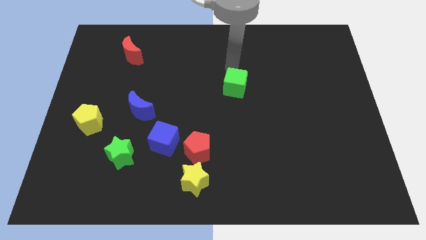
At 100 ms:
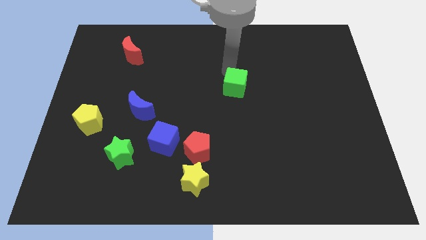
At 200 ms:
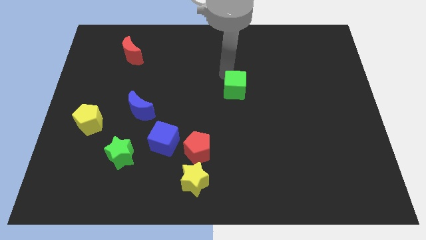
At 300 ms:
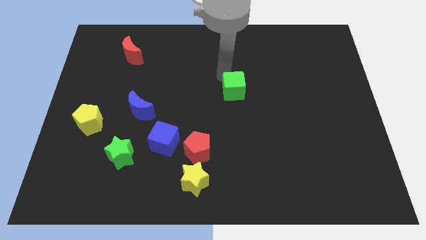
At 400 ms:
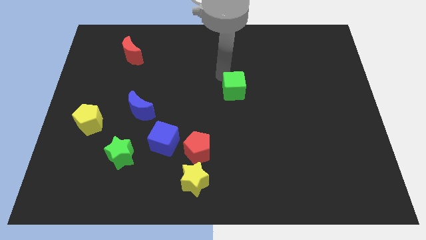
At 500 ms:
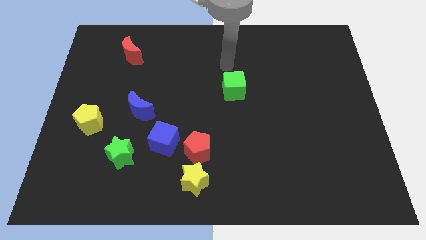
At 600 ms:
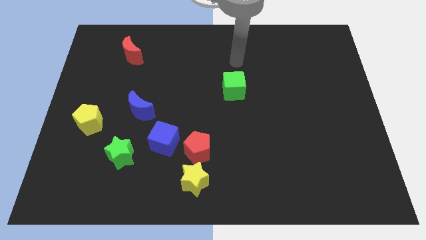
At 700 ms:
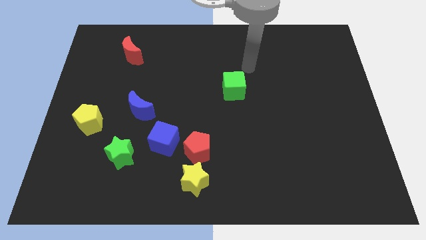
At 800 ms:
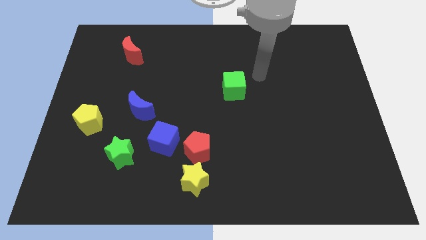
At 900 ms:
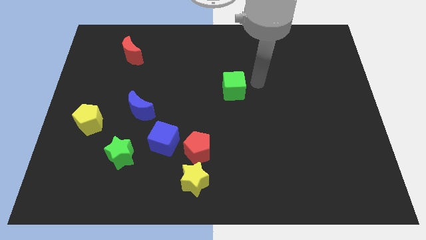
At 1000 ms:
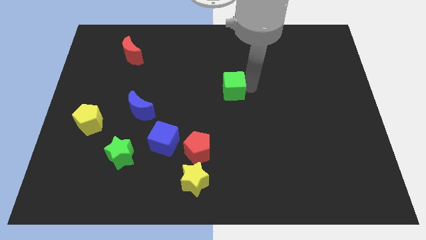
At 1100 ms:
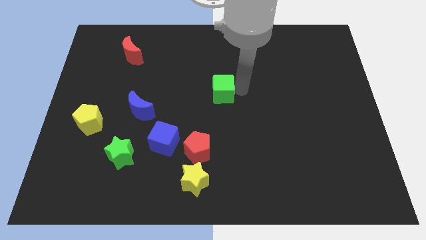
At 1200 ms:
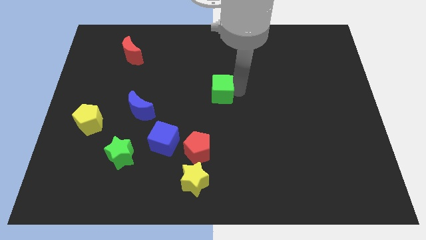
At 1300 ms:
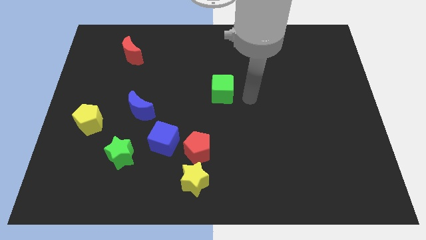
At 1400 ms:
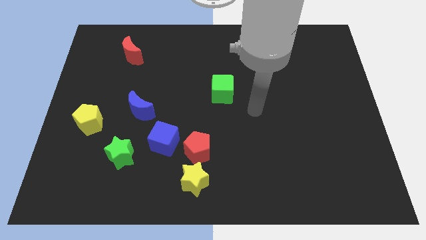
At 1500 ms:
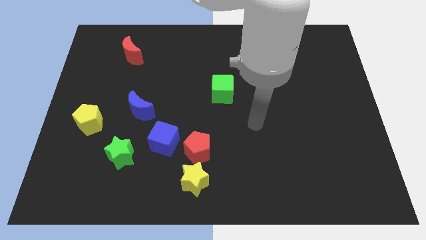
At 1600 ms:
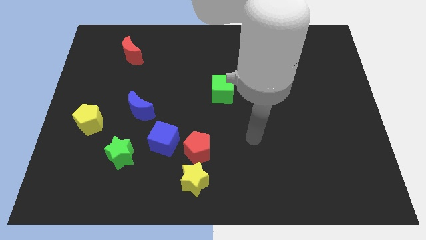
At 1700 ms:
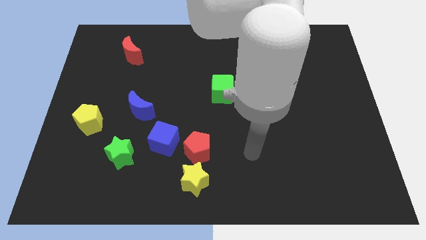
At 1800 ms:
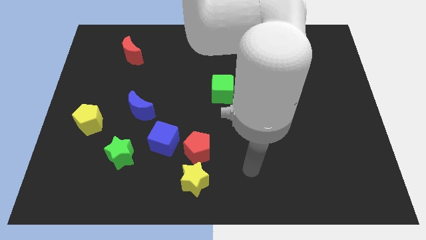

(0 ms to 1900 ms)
slightly push the green cube to the center of the board

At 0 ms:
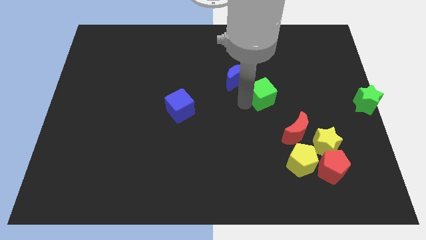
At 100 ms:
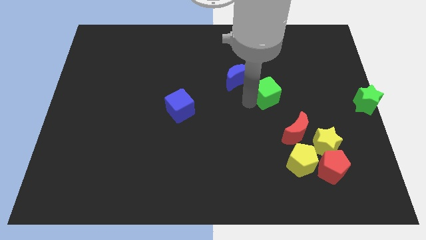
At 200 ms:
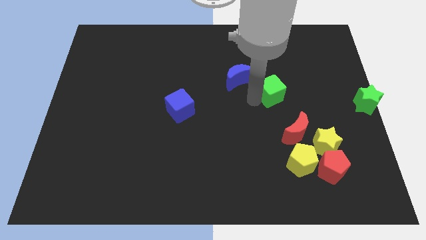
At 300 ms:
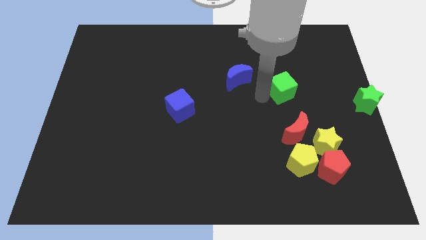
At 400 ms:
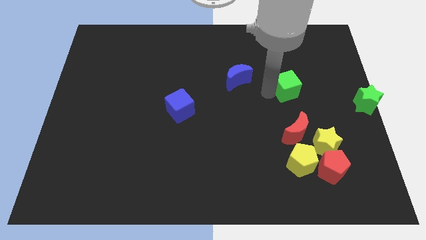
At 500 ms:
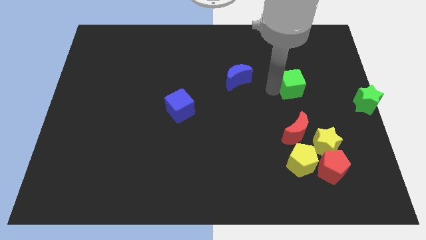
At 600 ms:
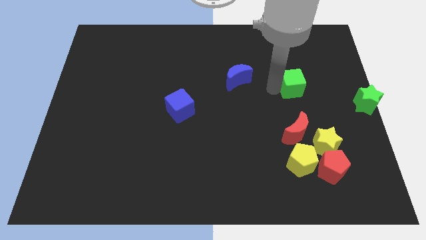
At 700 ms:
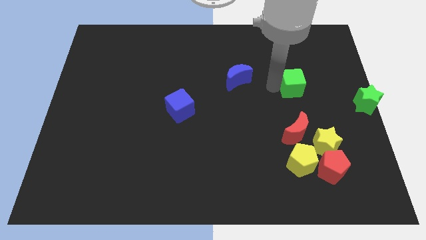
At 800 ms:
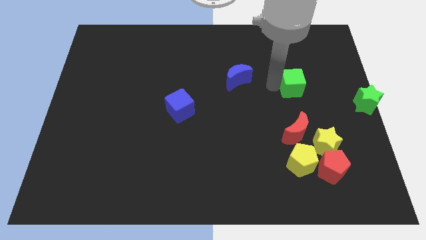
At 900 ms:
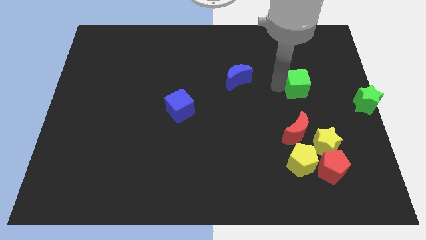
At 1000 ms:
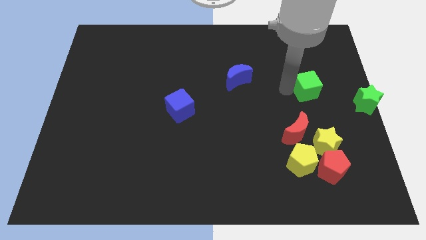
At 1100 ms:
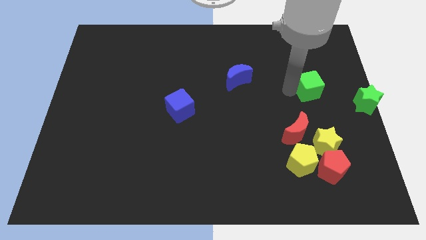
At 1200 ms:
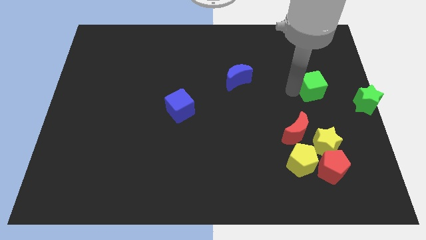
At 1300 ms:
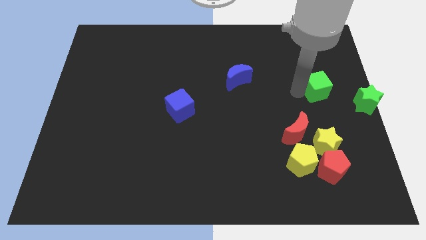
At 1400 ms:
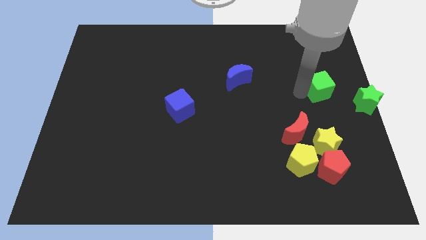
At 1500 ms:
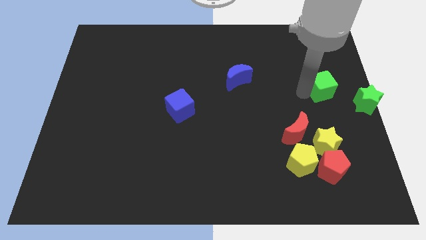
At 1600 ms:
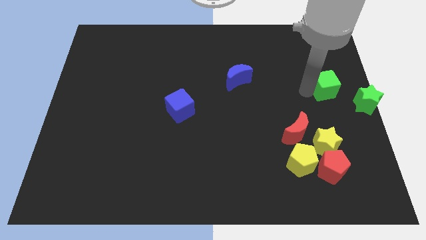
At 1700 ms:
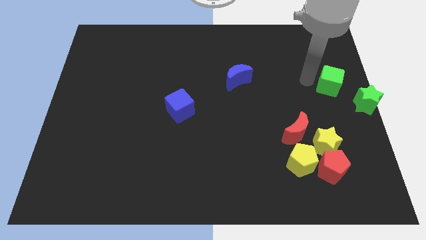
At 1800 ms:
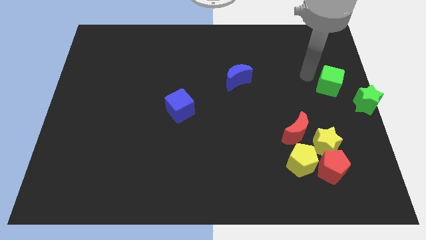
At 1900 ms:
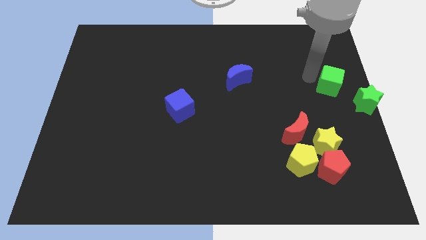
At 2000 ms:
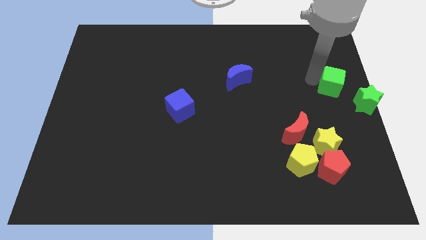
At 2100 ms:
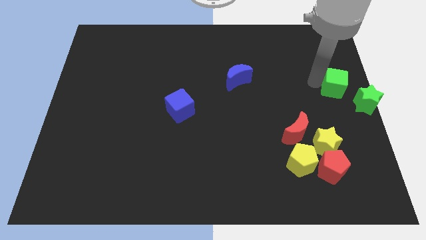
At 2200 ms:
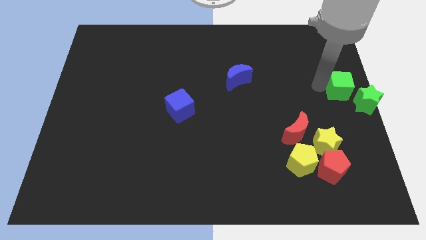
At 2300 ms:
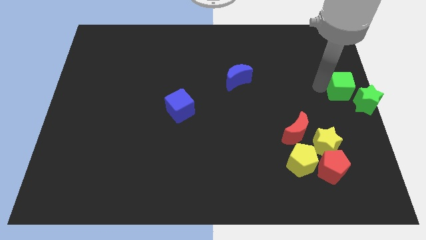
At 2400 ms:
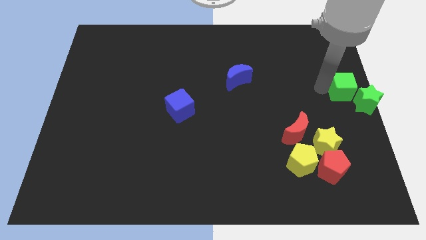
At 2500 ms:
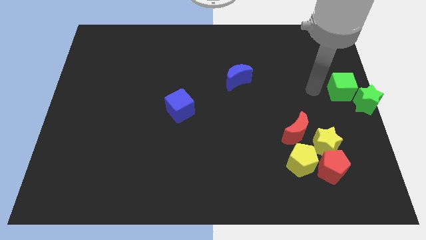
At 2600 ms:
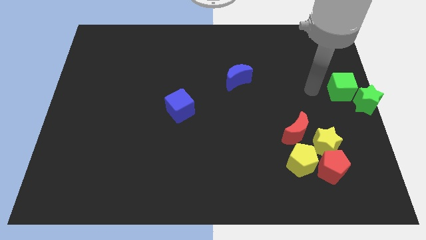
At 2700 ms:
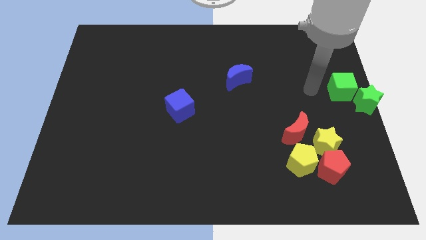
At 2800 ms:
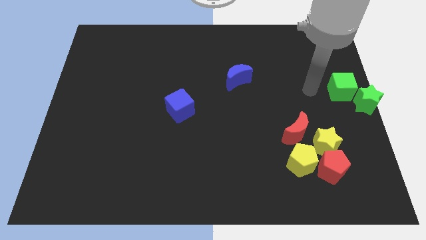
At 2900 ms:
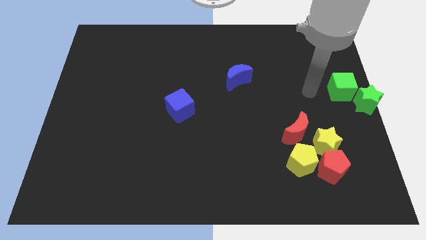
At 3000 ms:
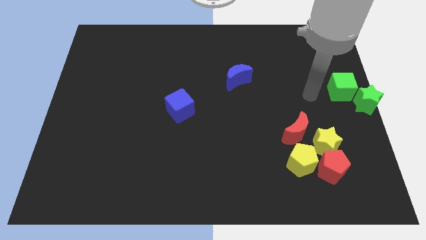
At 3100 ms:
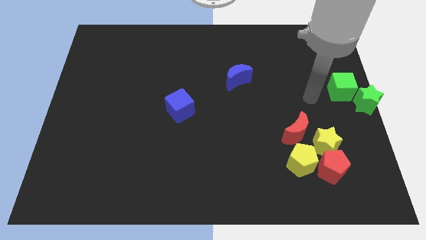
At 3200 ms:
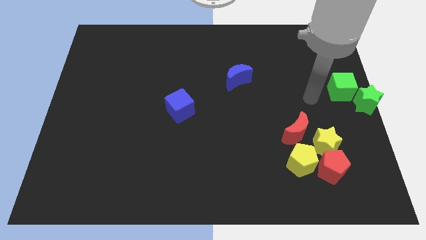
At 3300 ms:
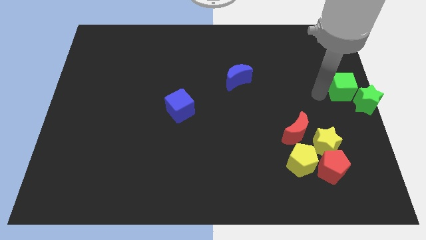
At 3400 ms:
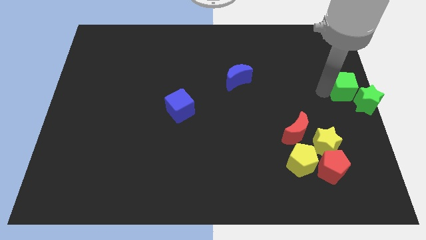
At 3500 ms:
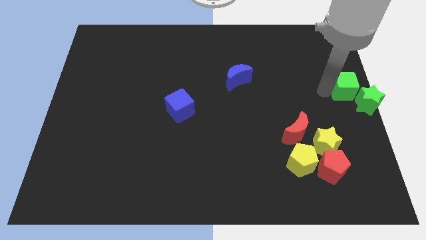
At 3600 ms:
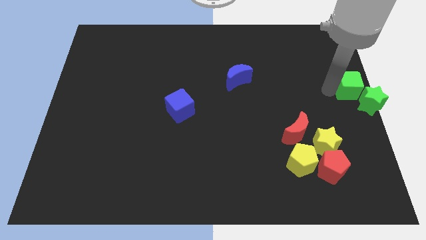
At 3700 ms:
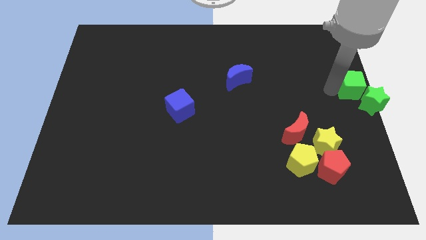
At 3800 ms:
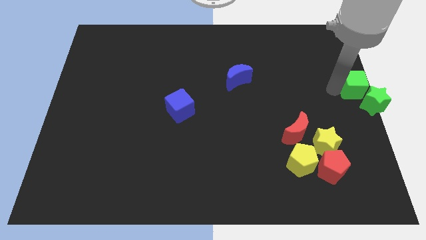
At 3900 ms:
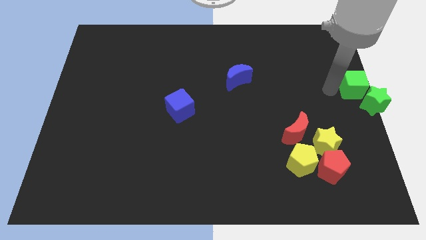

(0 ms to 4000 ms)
push green cube in to green star

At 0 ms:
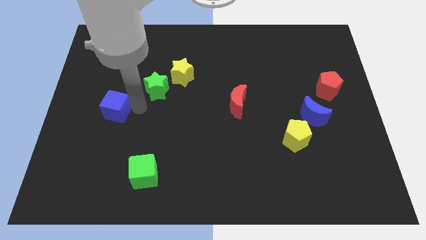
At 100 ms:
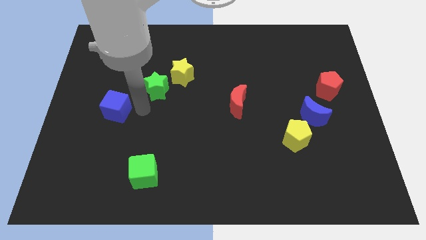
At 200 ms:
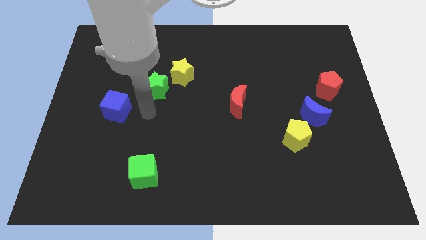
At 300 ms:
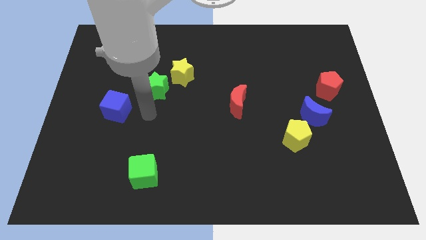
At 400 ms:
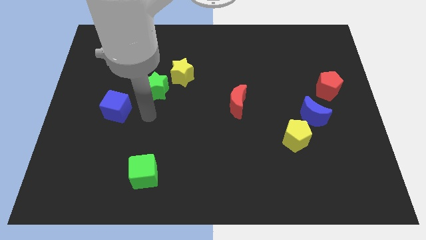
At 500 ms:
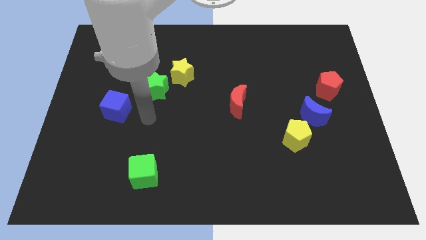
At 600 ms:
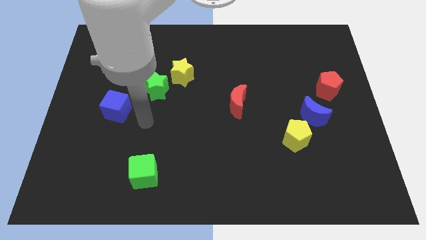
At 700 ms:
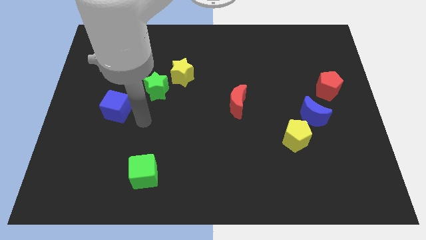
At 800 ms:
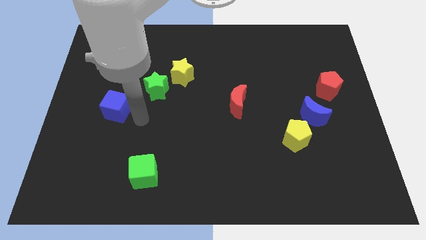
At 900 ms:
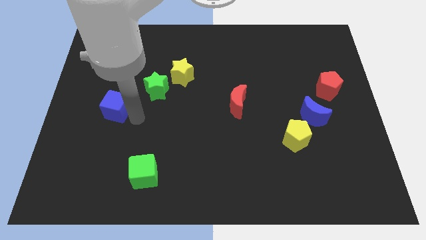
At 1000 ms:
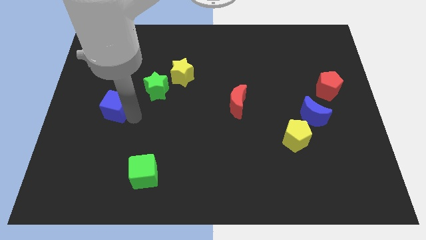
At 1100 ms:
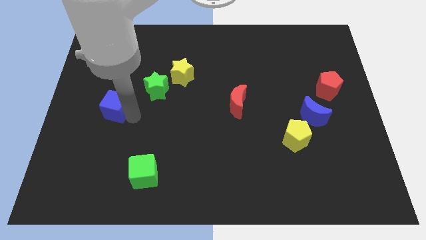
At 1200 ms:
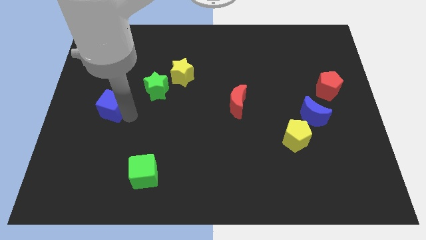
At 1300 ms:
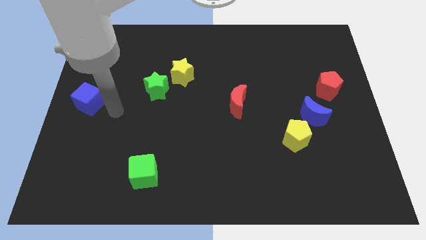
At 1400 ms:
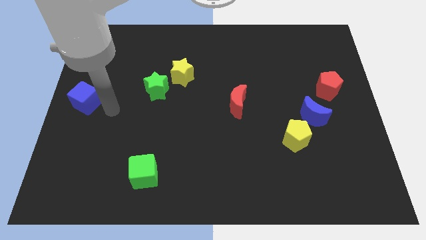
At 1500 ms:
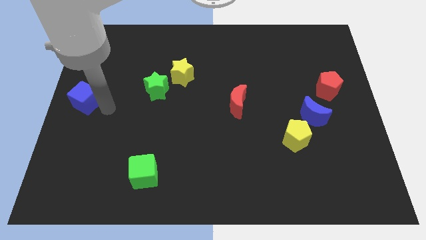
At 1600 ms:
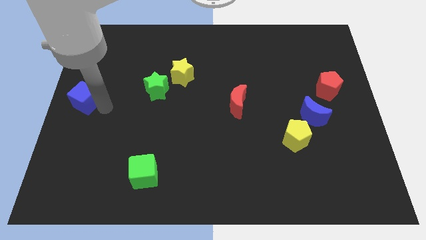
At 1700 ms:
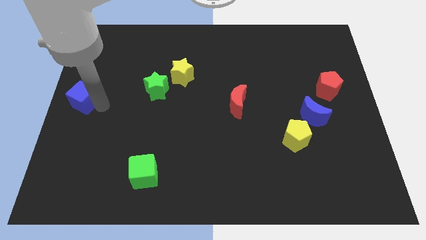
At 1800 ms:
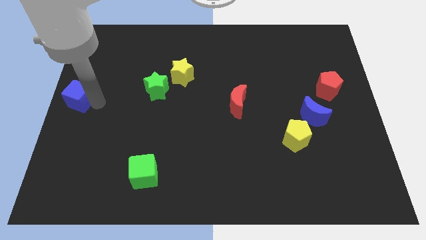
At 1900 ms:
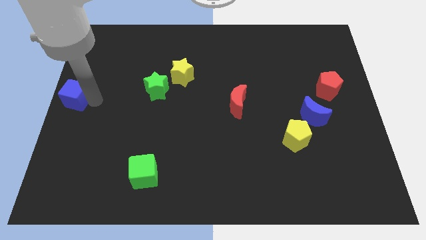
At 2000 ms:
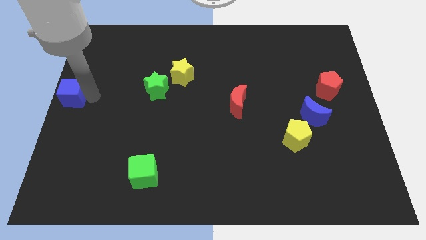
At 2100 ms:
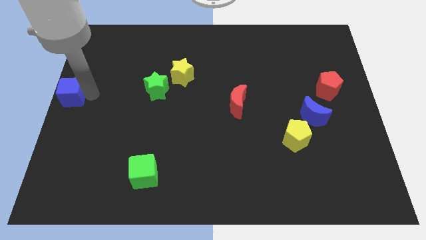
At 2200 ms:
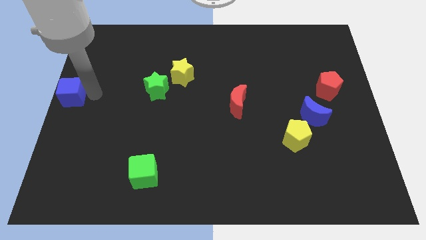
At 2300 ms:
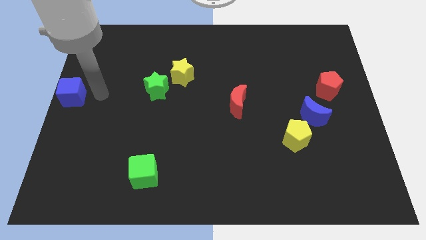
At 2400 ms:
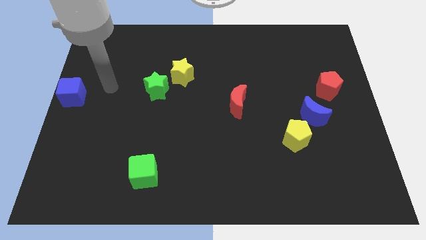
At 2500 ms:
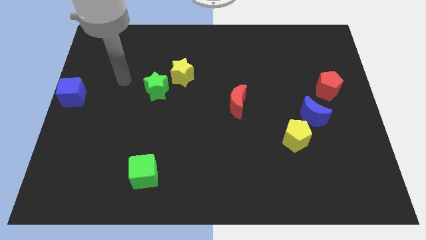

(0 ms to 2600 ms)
push the blue cube to the center left

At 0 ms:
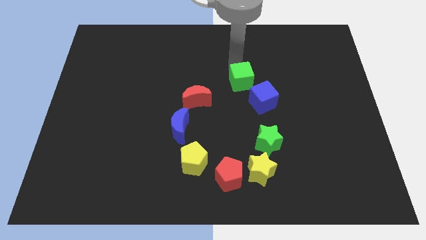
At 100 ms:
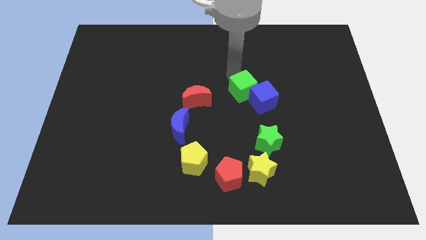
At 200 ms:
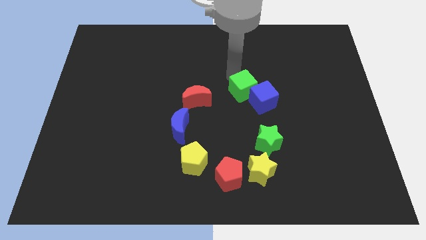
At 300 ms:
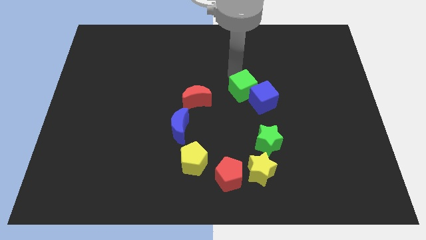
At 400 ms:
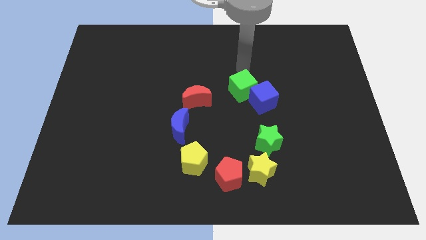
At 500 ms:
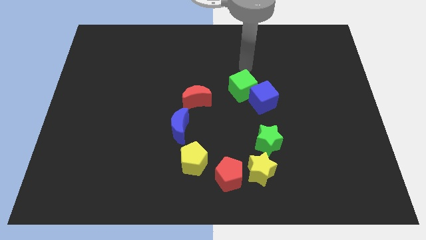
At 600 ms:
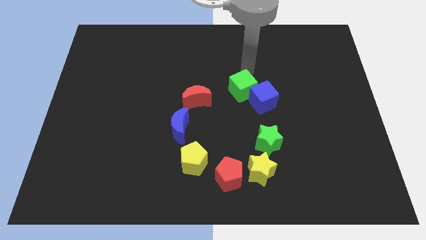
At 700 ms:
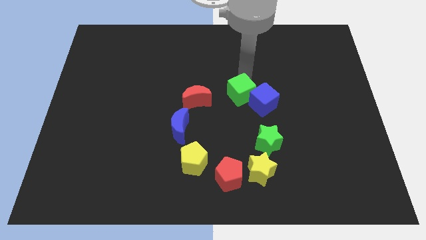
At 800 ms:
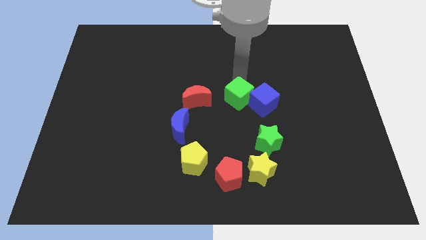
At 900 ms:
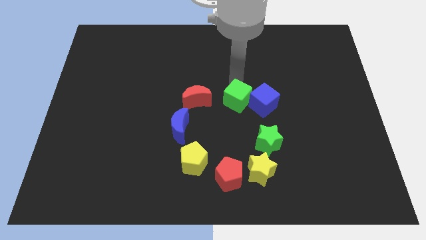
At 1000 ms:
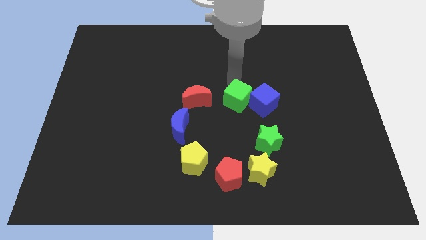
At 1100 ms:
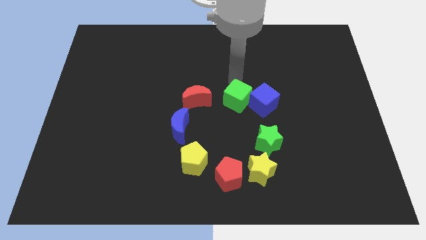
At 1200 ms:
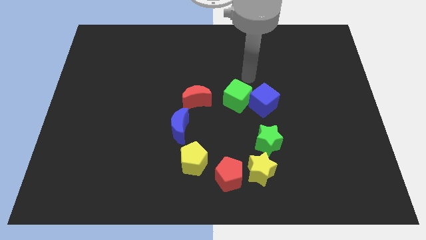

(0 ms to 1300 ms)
place the green cube to the top left of blue cube
